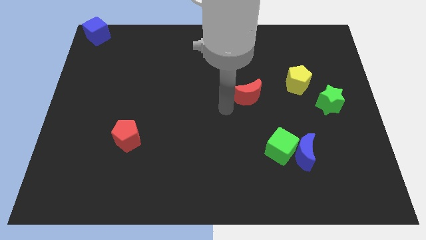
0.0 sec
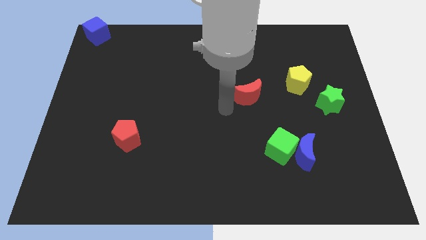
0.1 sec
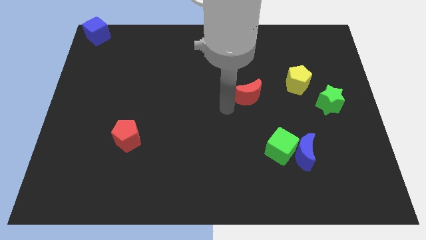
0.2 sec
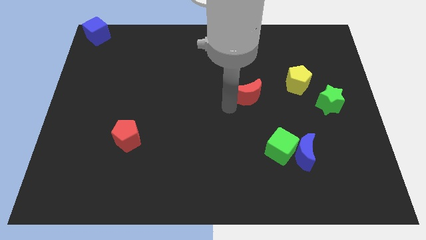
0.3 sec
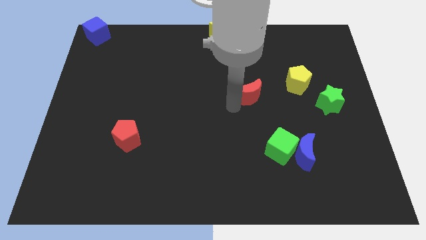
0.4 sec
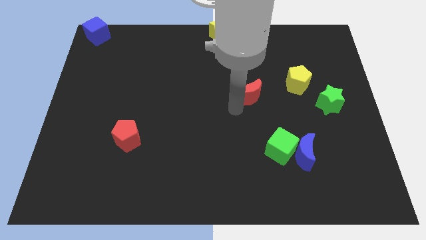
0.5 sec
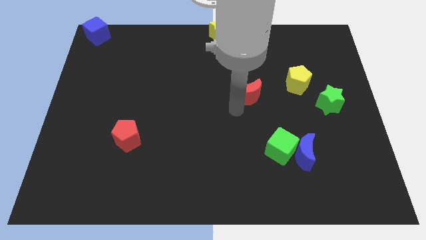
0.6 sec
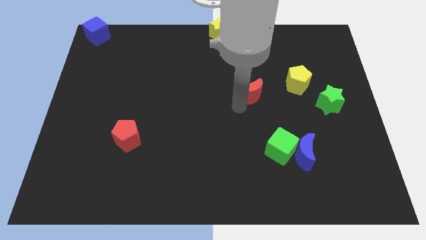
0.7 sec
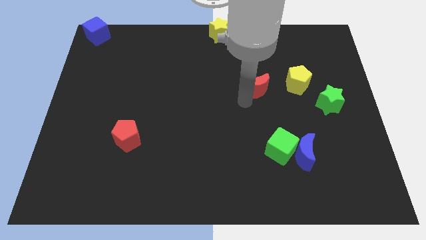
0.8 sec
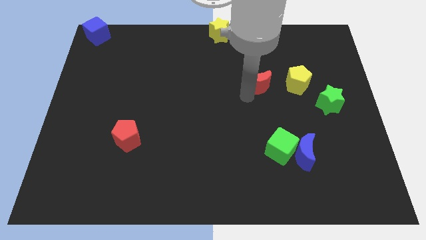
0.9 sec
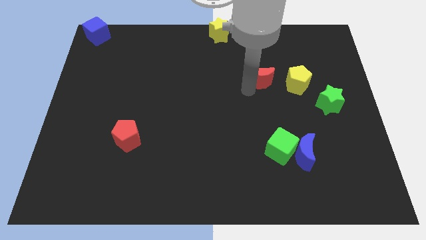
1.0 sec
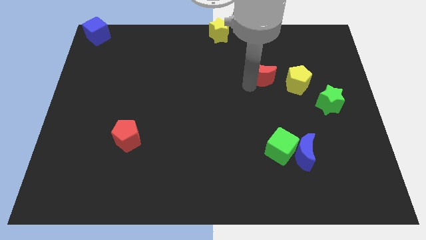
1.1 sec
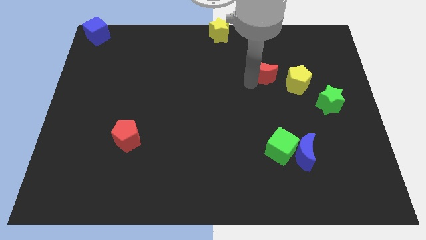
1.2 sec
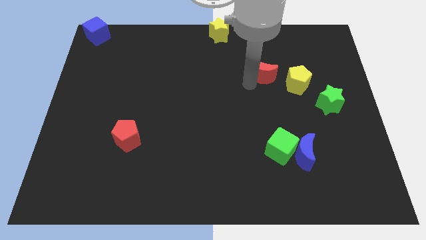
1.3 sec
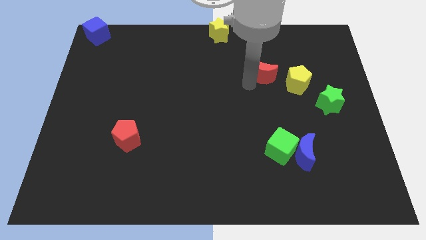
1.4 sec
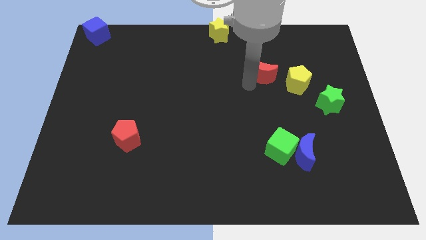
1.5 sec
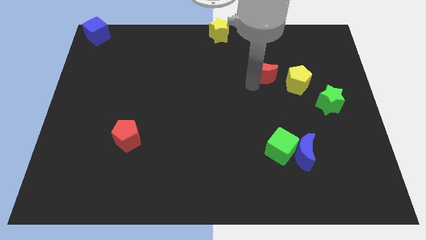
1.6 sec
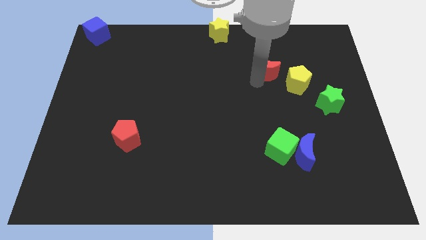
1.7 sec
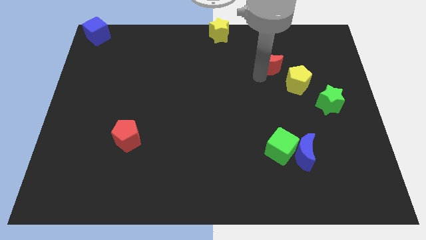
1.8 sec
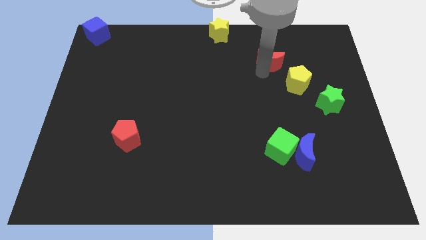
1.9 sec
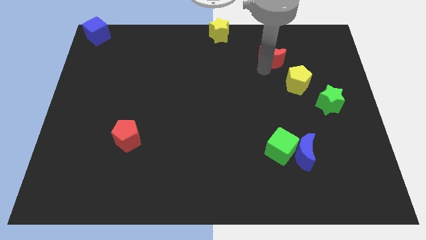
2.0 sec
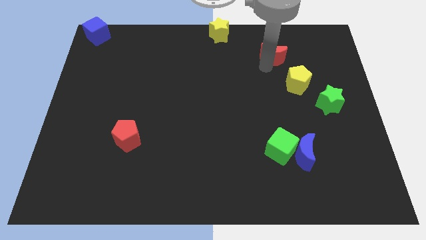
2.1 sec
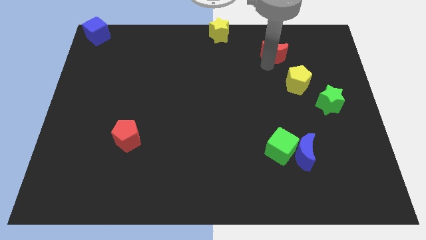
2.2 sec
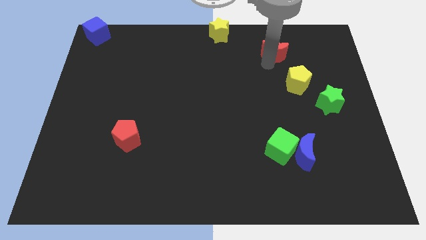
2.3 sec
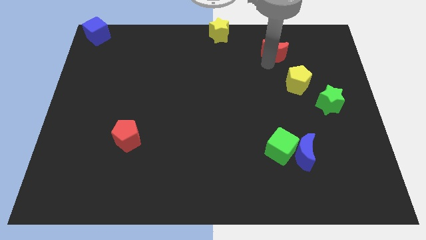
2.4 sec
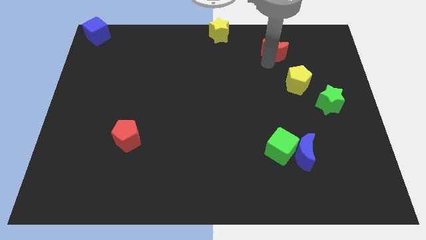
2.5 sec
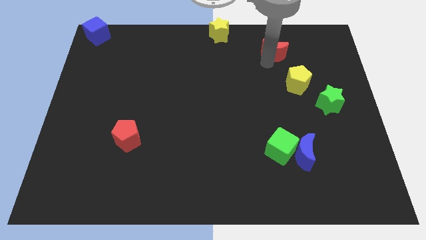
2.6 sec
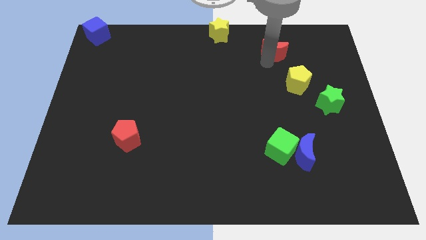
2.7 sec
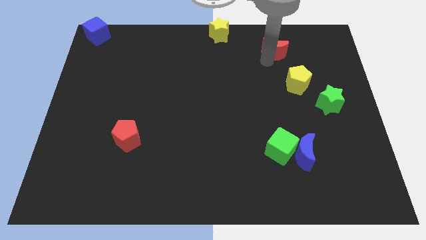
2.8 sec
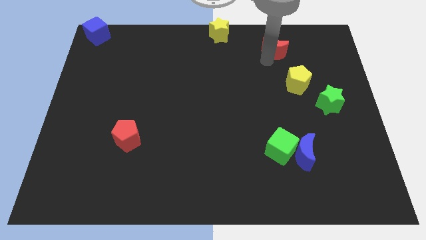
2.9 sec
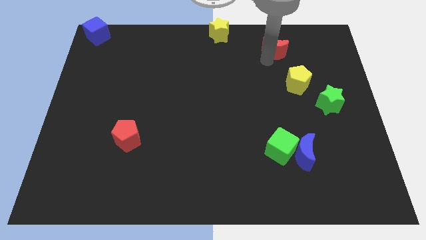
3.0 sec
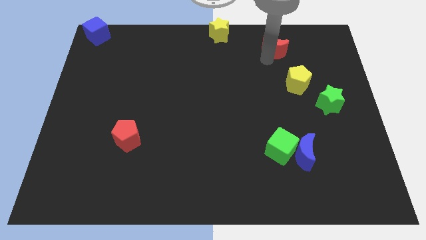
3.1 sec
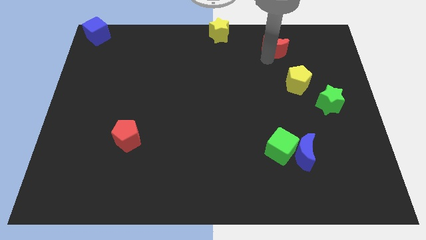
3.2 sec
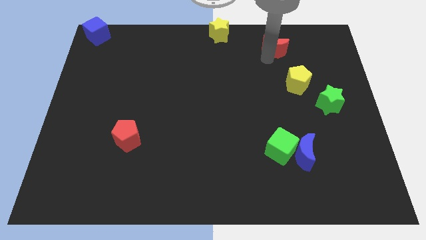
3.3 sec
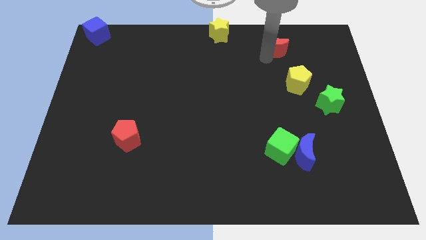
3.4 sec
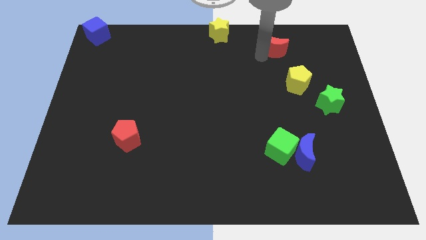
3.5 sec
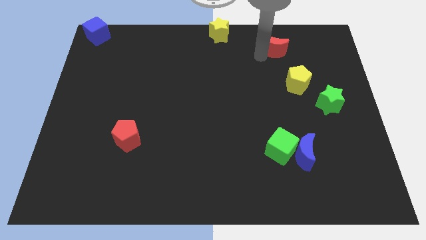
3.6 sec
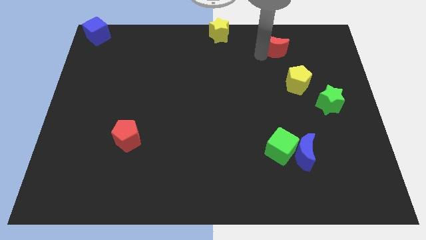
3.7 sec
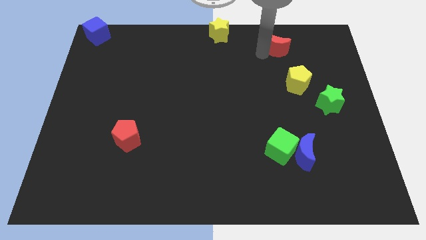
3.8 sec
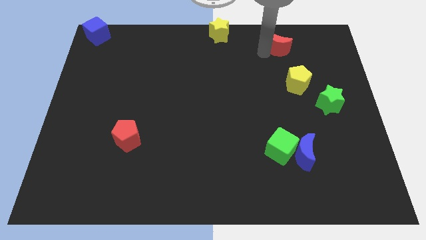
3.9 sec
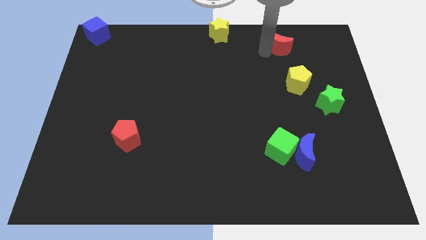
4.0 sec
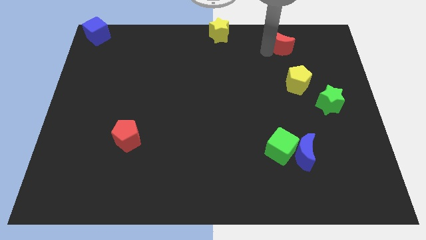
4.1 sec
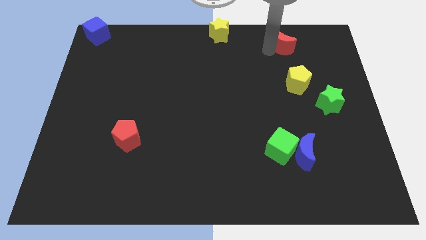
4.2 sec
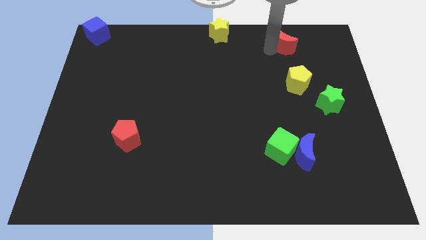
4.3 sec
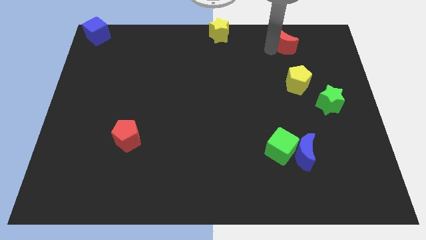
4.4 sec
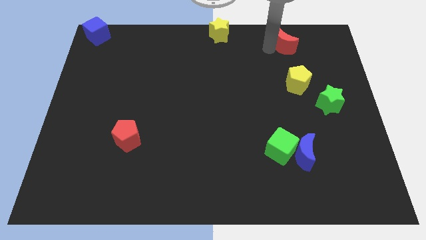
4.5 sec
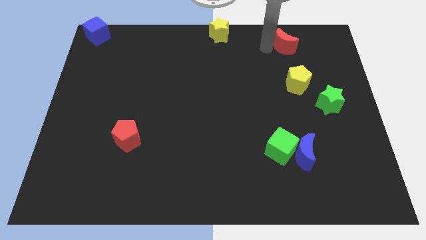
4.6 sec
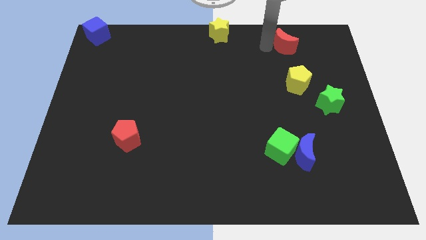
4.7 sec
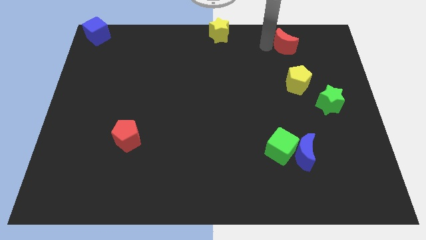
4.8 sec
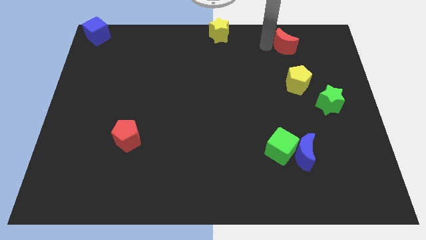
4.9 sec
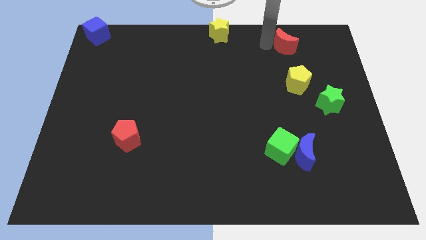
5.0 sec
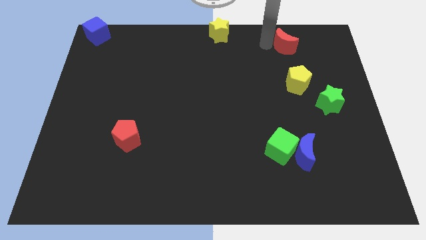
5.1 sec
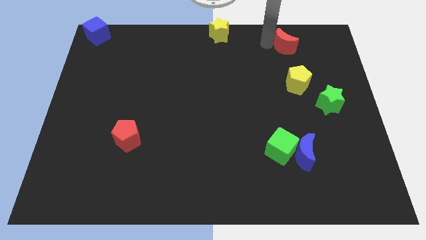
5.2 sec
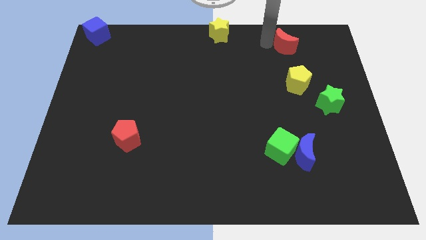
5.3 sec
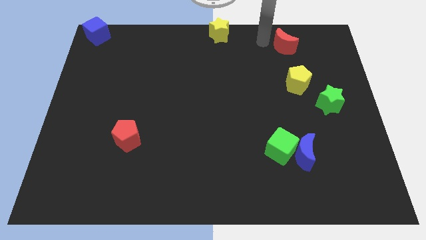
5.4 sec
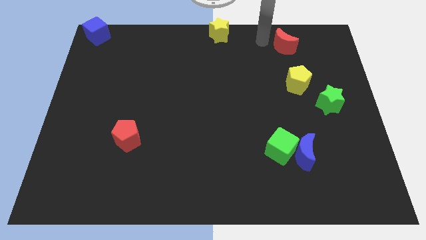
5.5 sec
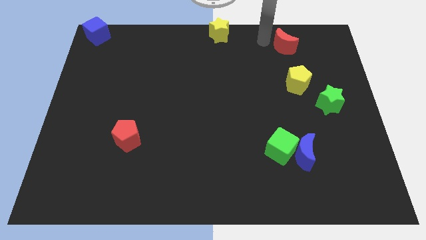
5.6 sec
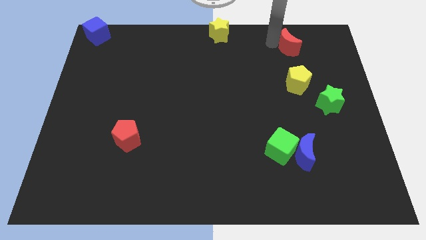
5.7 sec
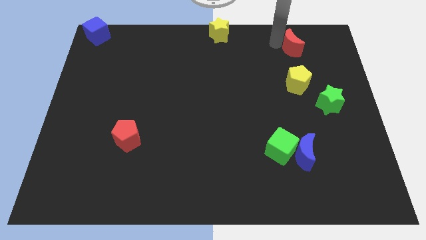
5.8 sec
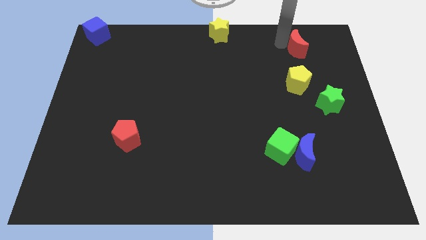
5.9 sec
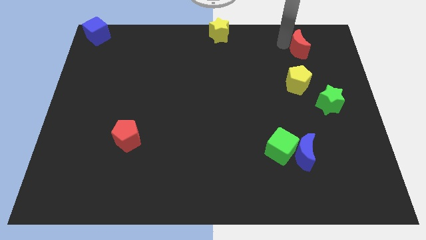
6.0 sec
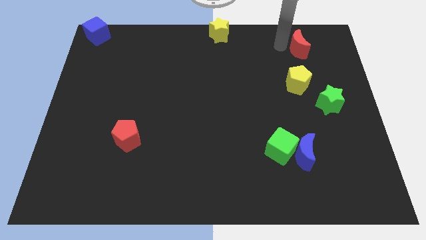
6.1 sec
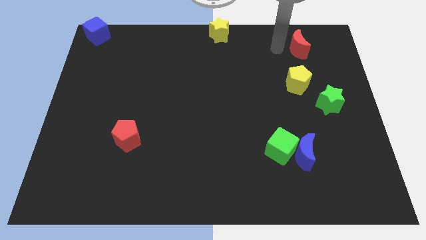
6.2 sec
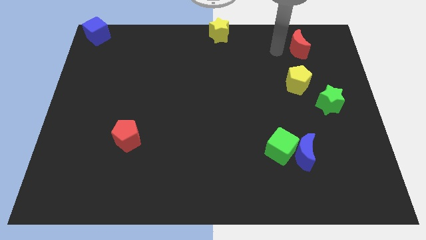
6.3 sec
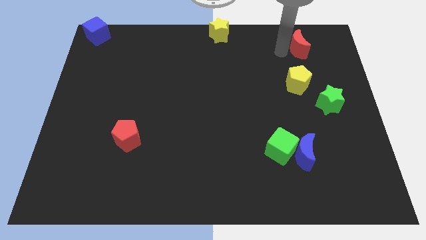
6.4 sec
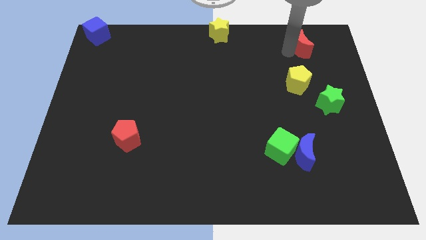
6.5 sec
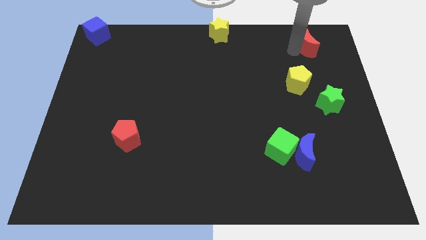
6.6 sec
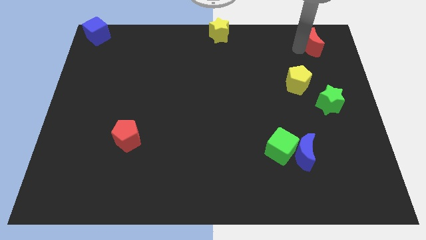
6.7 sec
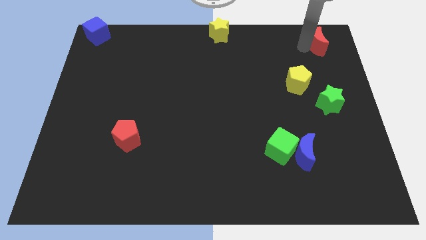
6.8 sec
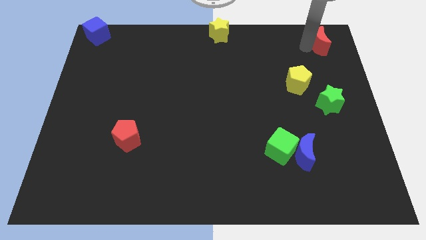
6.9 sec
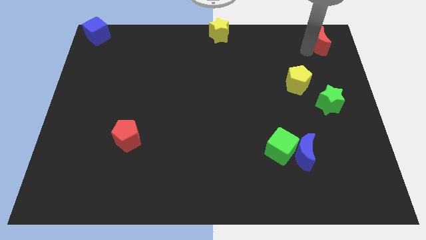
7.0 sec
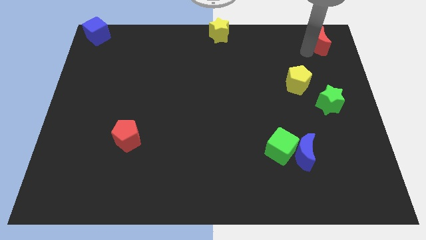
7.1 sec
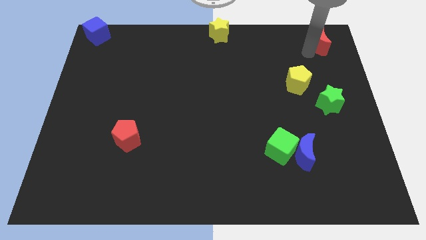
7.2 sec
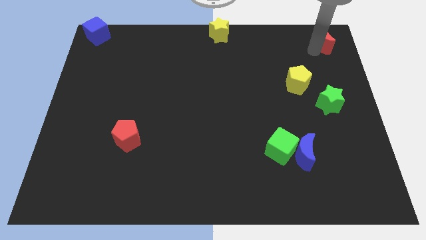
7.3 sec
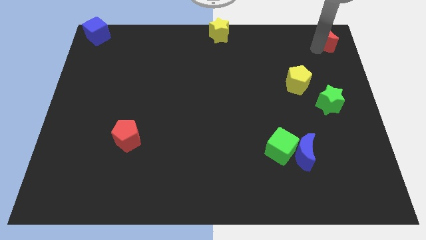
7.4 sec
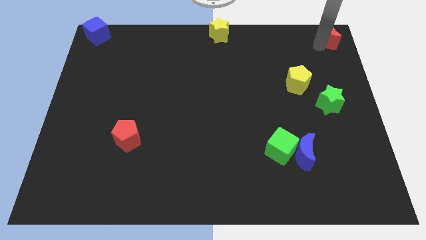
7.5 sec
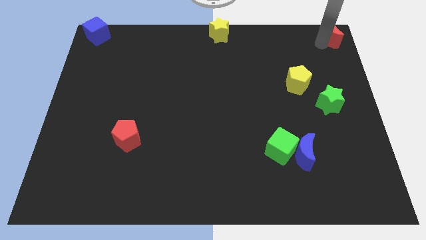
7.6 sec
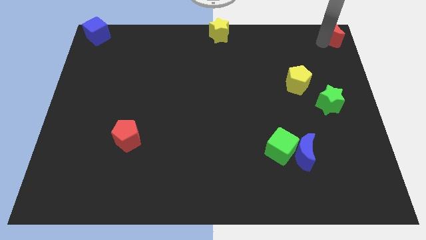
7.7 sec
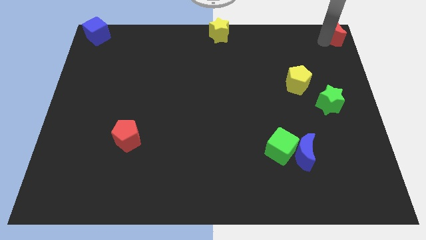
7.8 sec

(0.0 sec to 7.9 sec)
push the red crescent to the top right of the board

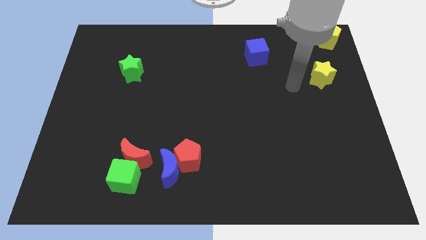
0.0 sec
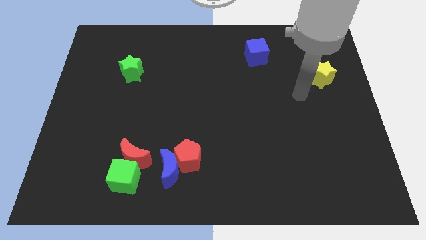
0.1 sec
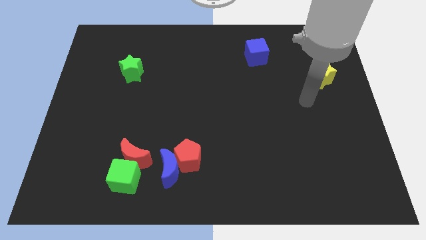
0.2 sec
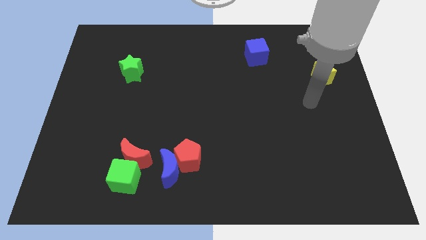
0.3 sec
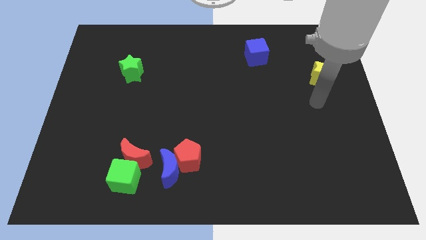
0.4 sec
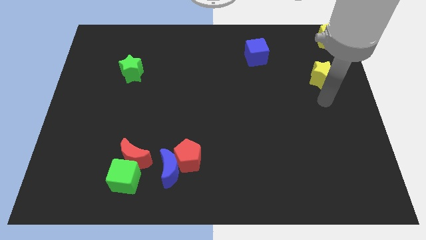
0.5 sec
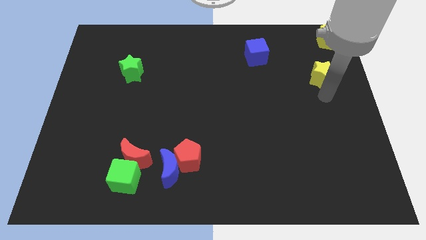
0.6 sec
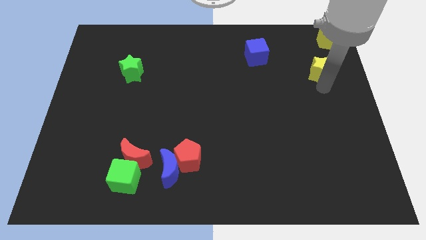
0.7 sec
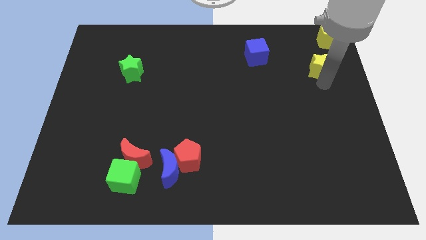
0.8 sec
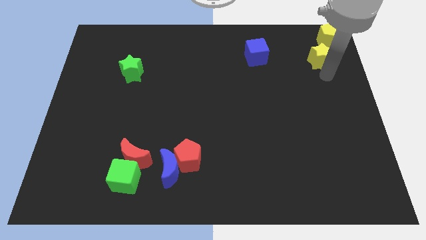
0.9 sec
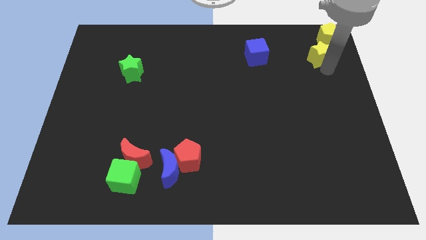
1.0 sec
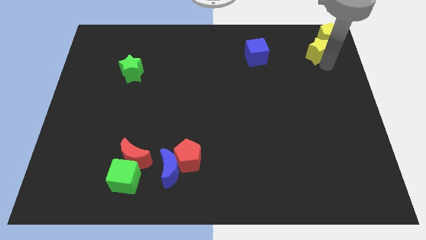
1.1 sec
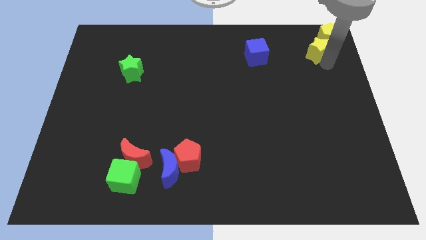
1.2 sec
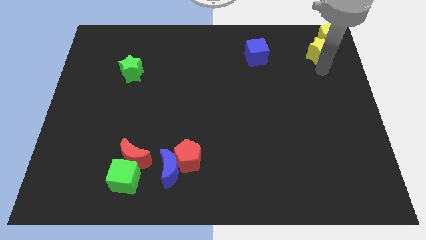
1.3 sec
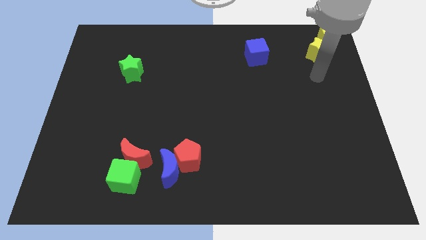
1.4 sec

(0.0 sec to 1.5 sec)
place the yellow star below the yellow pentagon
